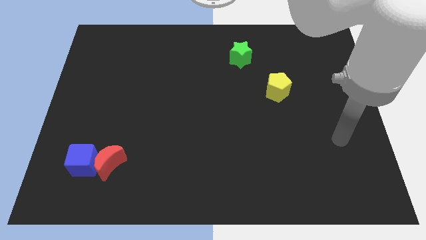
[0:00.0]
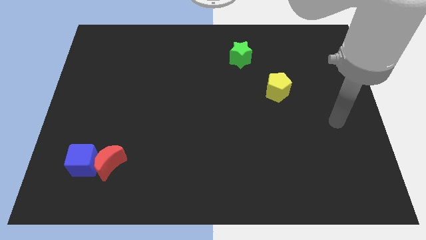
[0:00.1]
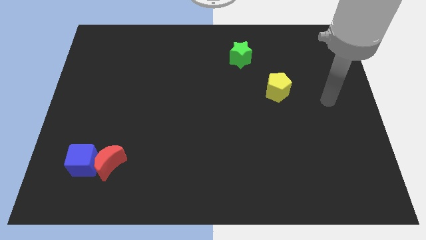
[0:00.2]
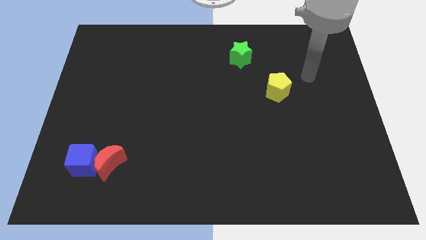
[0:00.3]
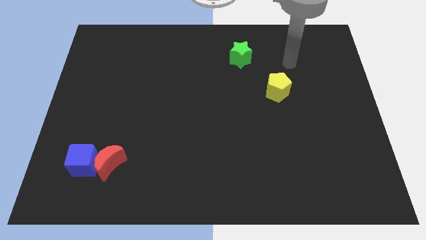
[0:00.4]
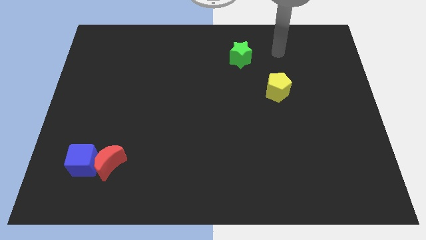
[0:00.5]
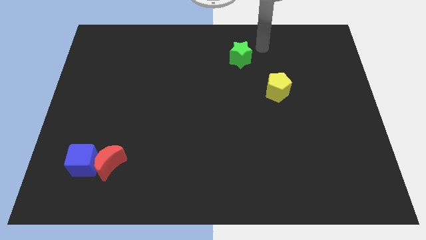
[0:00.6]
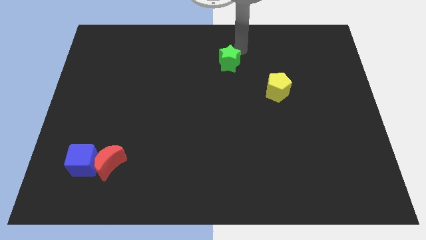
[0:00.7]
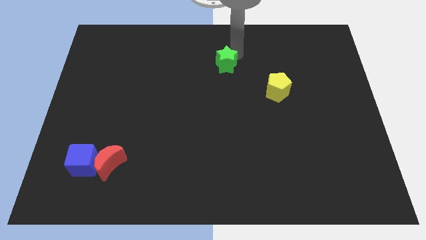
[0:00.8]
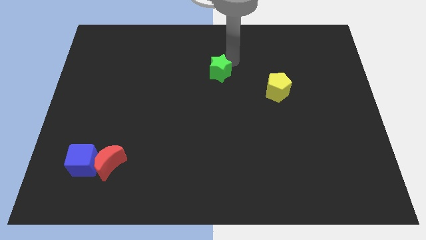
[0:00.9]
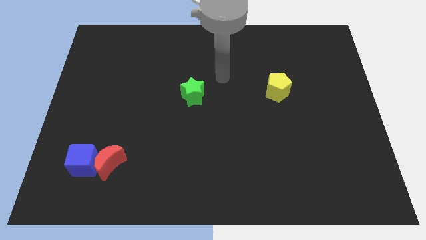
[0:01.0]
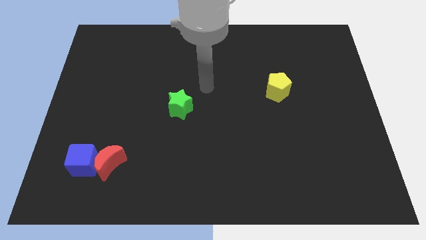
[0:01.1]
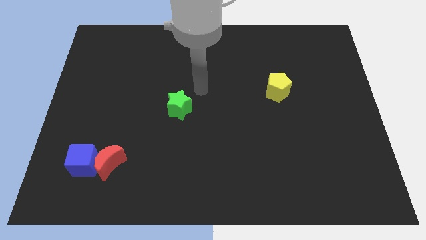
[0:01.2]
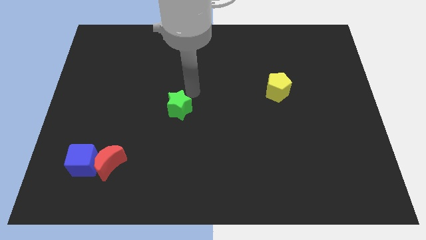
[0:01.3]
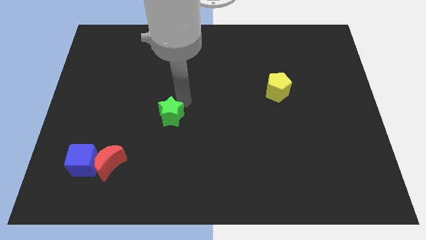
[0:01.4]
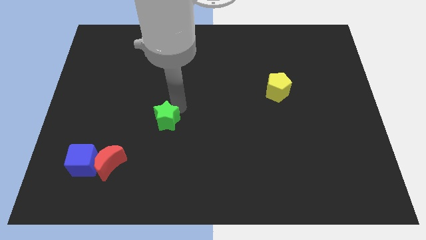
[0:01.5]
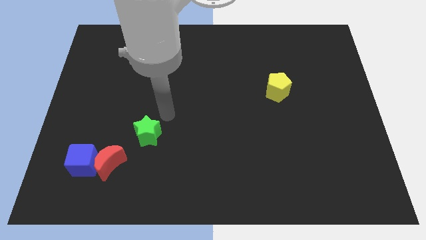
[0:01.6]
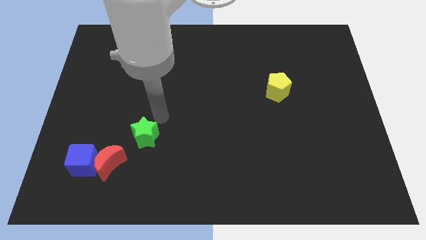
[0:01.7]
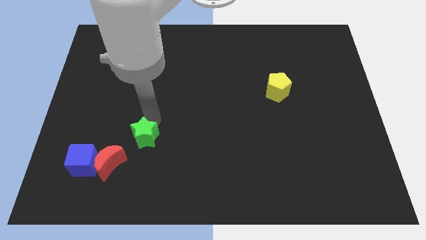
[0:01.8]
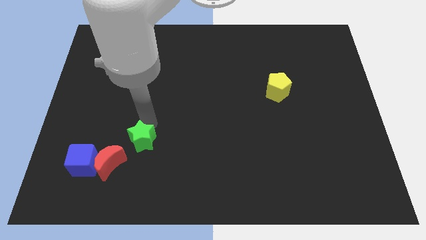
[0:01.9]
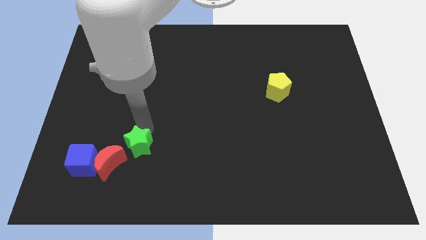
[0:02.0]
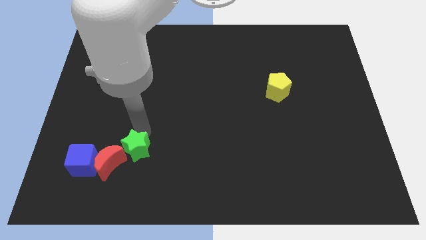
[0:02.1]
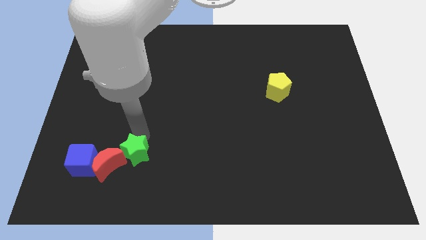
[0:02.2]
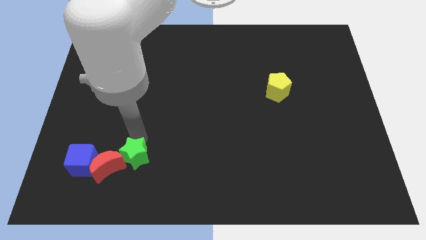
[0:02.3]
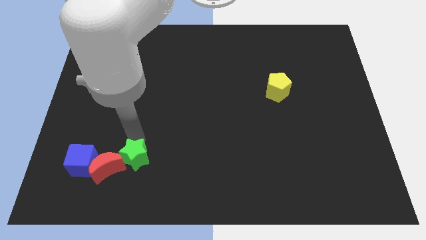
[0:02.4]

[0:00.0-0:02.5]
slide the star towards the moon

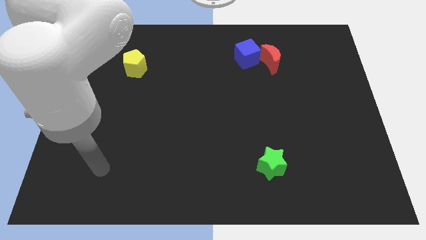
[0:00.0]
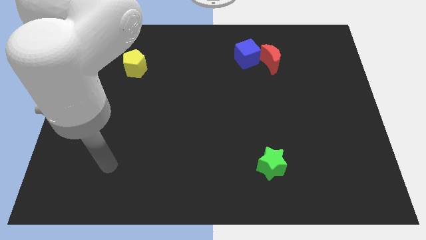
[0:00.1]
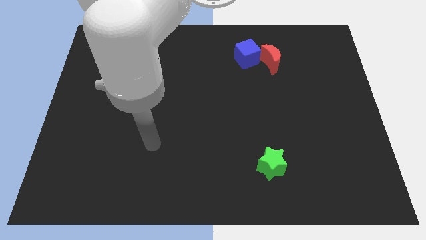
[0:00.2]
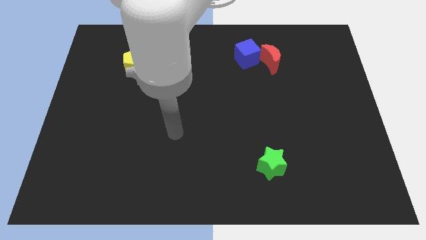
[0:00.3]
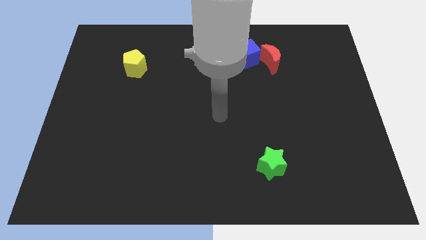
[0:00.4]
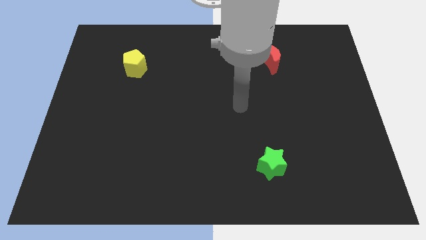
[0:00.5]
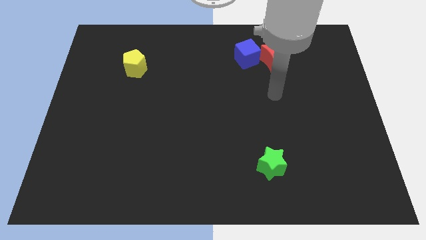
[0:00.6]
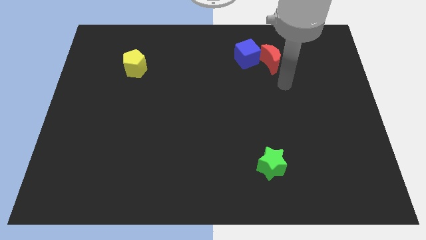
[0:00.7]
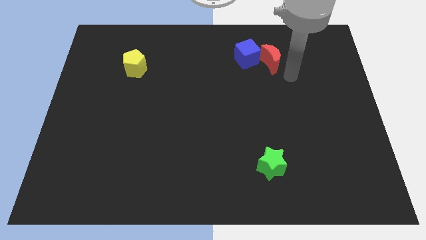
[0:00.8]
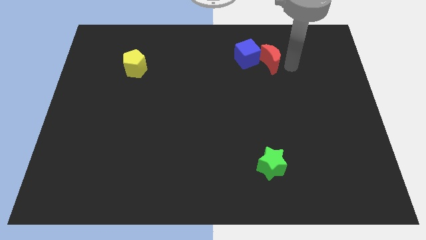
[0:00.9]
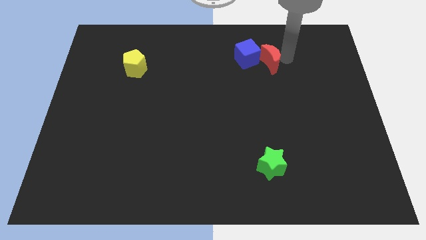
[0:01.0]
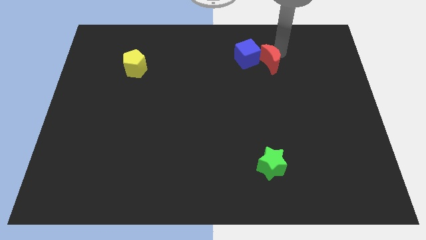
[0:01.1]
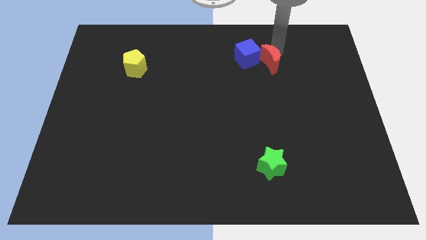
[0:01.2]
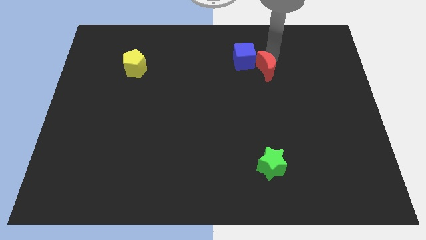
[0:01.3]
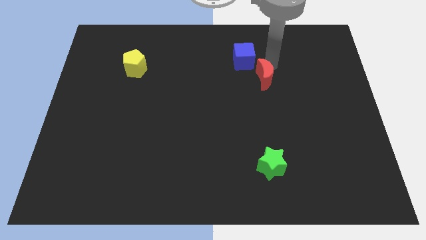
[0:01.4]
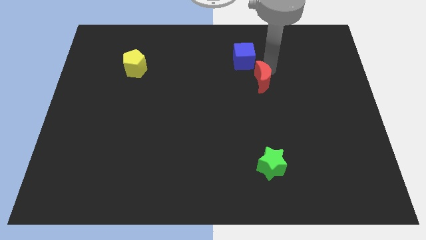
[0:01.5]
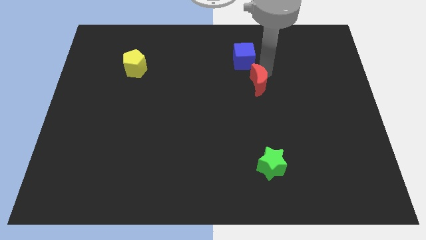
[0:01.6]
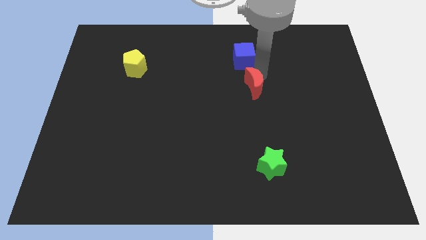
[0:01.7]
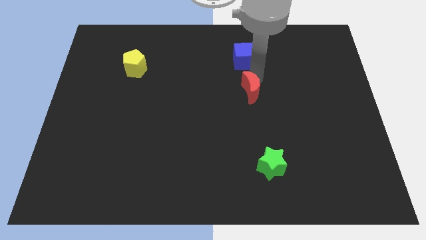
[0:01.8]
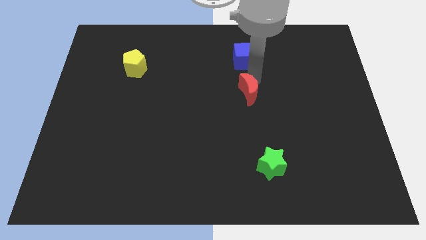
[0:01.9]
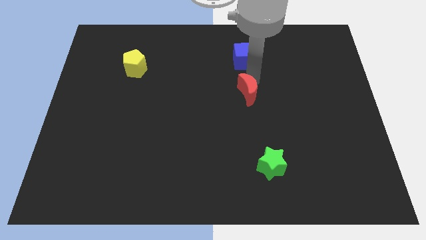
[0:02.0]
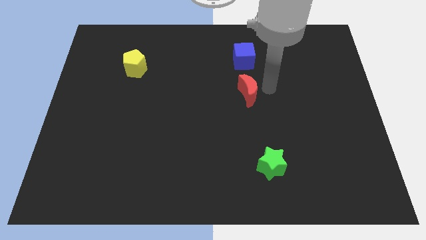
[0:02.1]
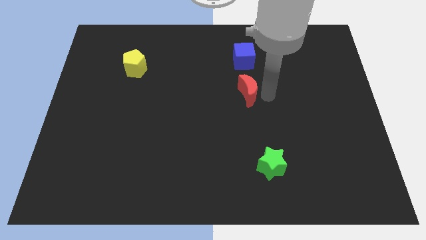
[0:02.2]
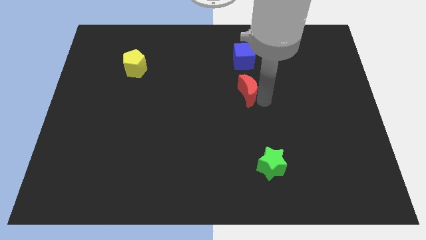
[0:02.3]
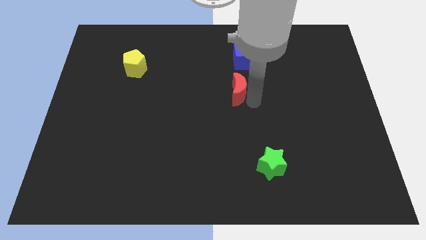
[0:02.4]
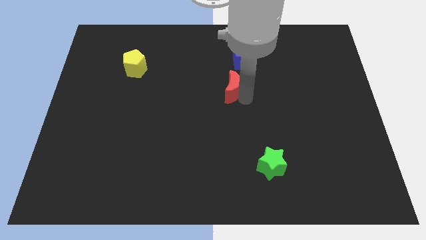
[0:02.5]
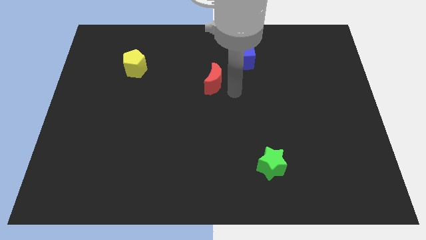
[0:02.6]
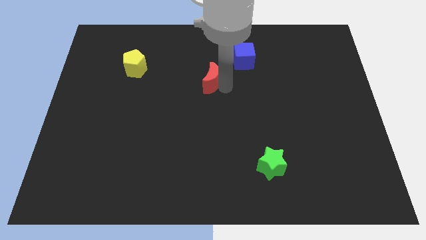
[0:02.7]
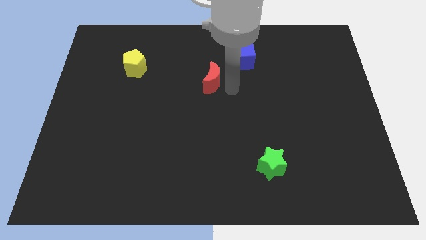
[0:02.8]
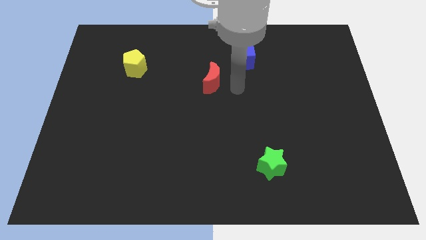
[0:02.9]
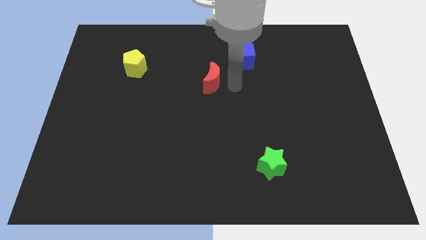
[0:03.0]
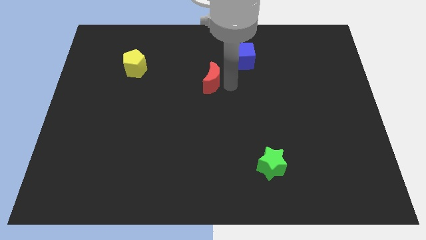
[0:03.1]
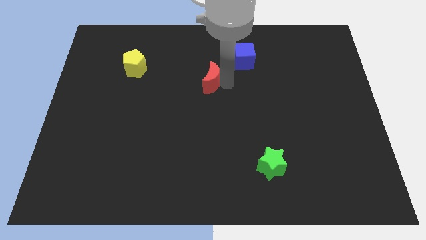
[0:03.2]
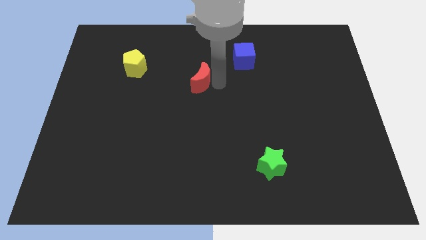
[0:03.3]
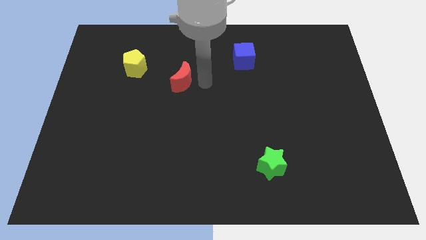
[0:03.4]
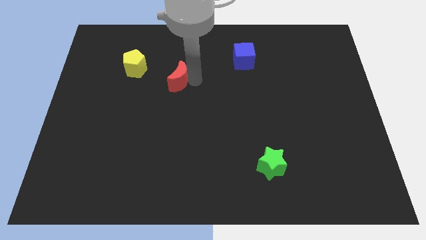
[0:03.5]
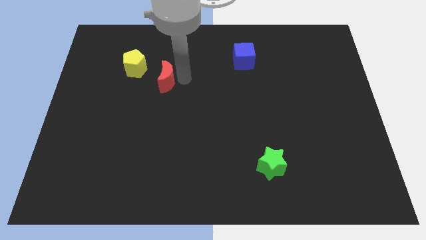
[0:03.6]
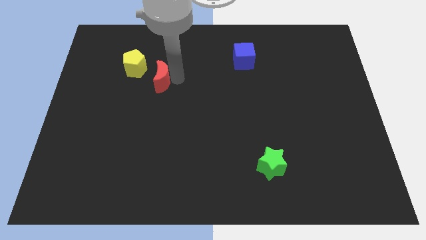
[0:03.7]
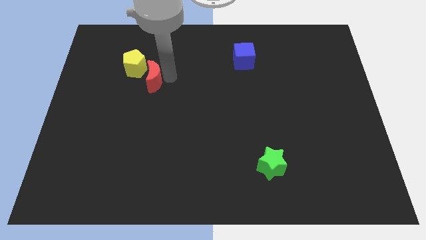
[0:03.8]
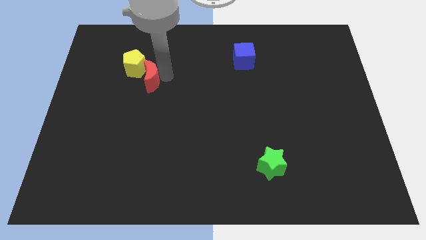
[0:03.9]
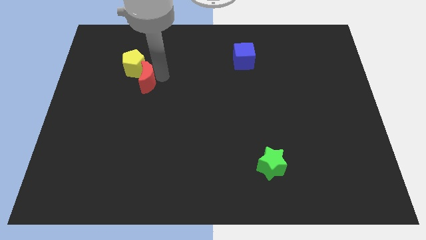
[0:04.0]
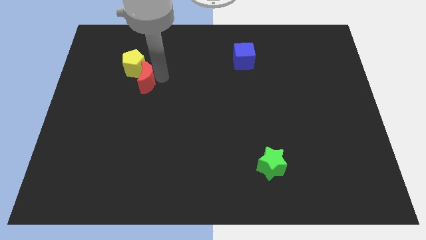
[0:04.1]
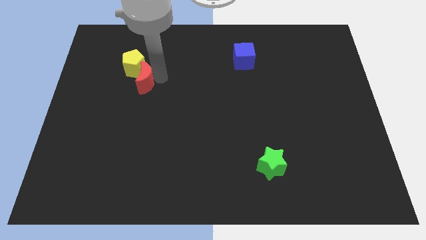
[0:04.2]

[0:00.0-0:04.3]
slide the red block close to the yellow pentagon

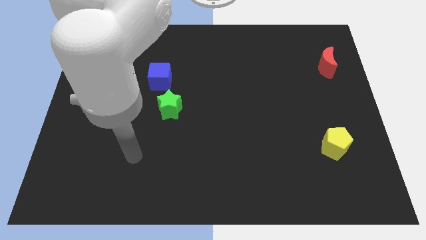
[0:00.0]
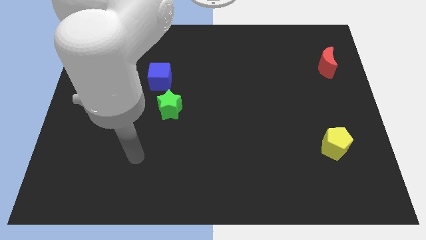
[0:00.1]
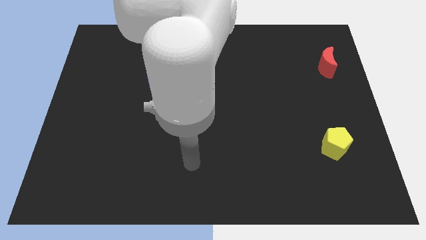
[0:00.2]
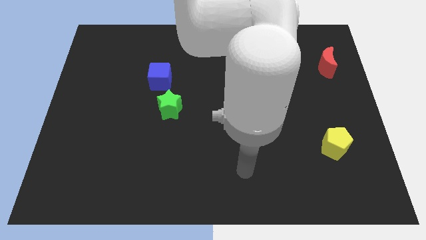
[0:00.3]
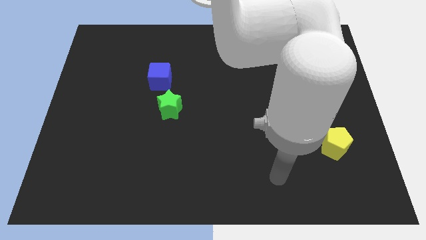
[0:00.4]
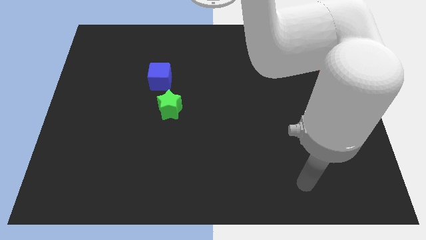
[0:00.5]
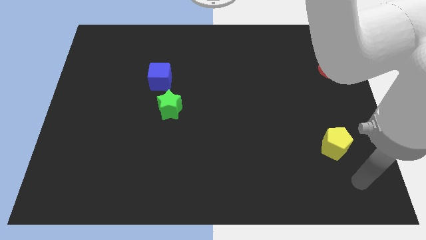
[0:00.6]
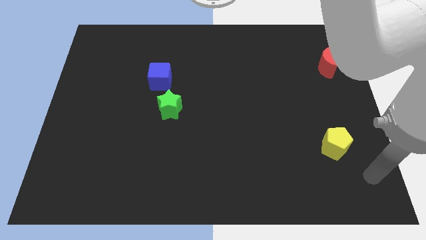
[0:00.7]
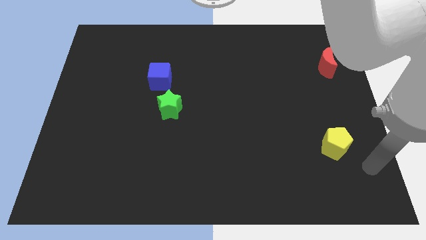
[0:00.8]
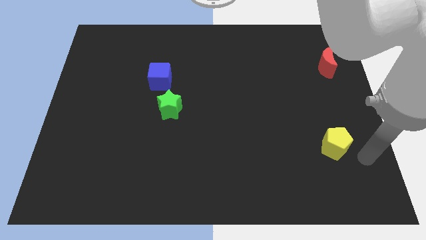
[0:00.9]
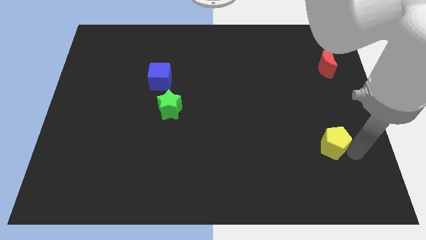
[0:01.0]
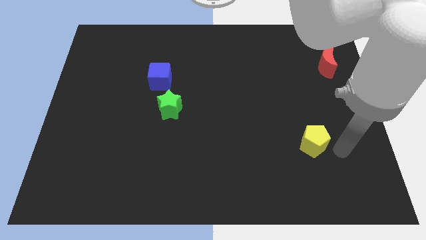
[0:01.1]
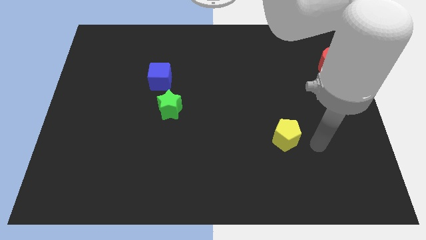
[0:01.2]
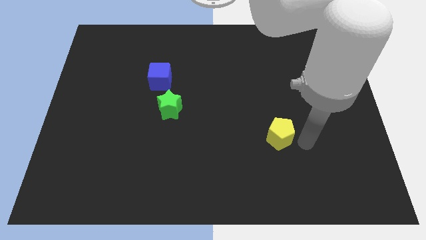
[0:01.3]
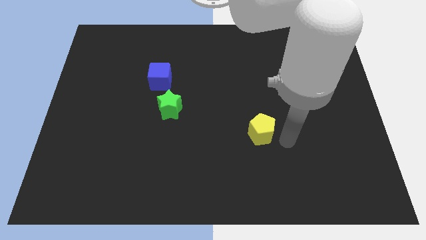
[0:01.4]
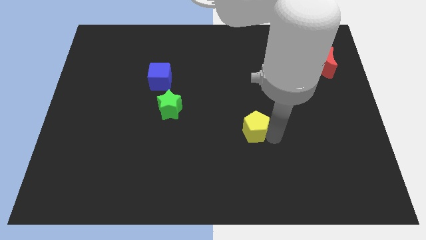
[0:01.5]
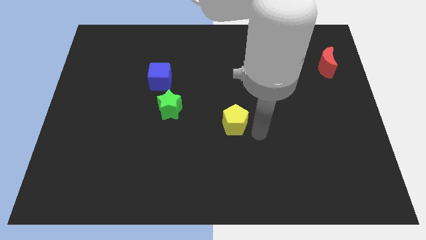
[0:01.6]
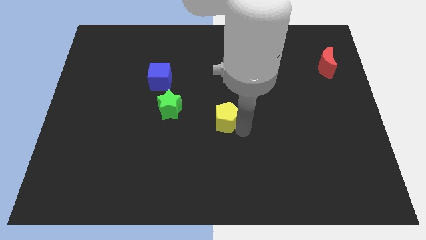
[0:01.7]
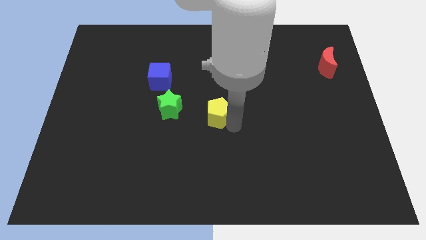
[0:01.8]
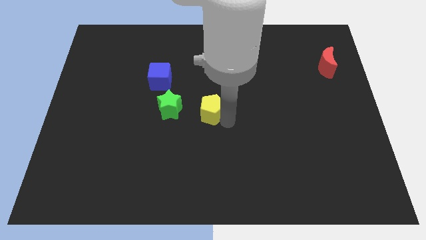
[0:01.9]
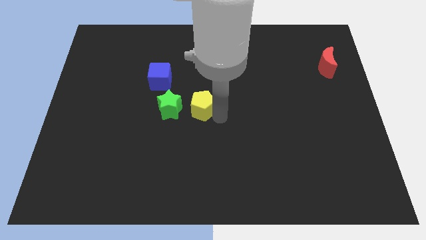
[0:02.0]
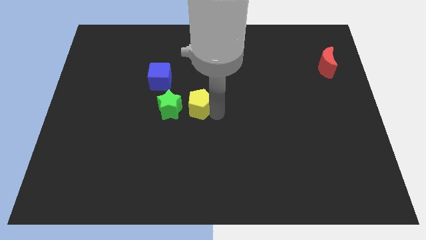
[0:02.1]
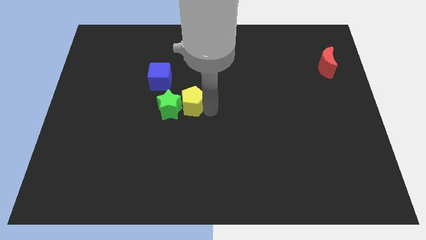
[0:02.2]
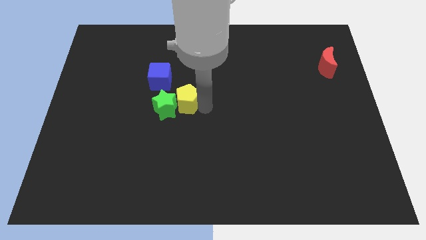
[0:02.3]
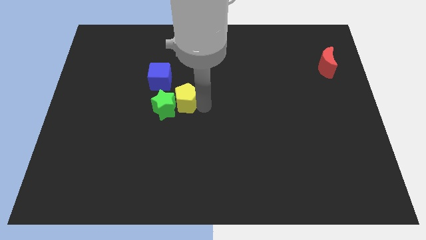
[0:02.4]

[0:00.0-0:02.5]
move the pentagon to the star
